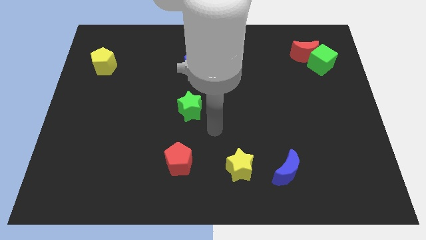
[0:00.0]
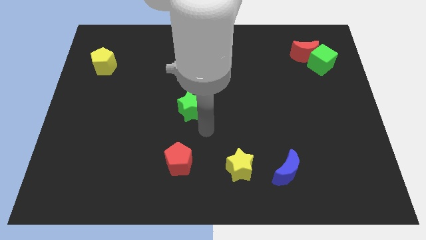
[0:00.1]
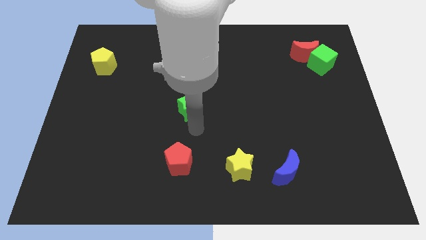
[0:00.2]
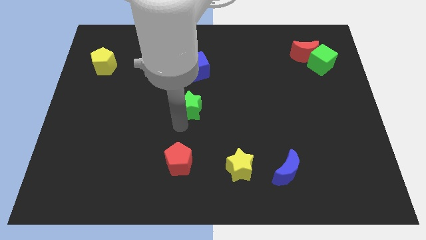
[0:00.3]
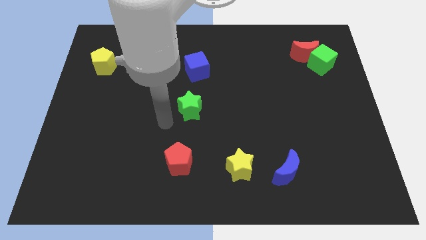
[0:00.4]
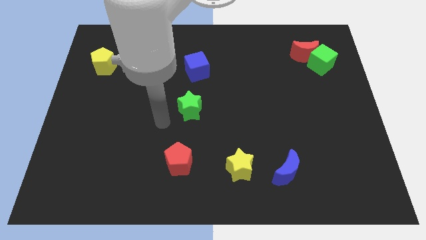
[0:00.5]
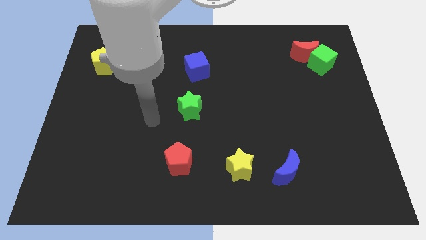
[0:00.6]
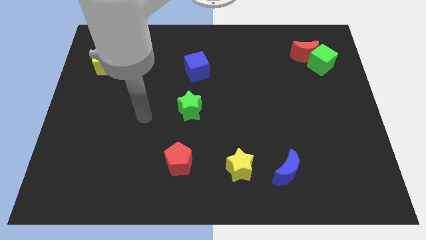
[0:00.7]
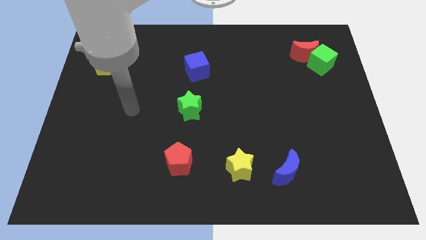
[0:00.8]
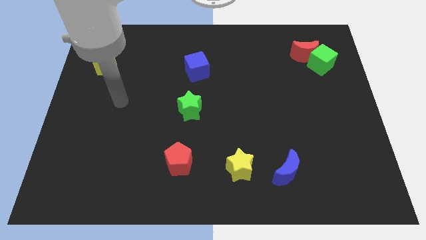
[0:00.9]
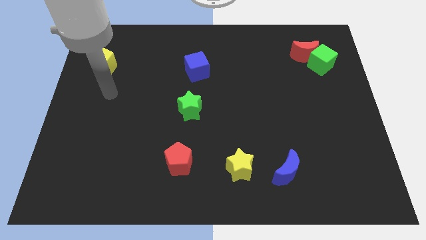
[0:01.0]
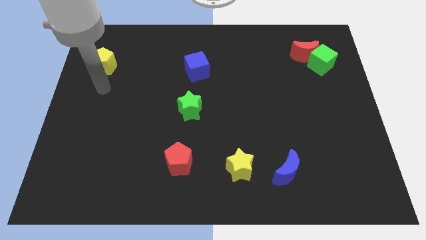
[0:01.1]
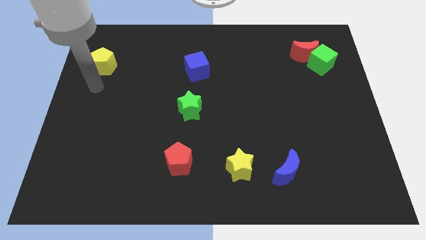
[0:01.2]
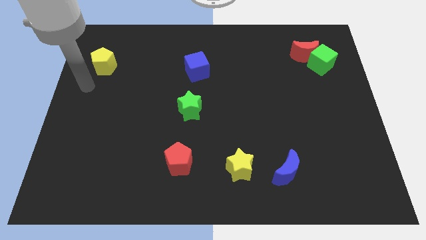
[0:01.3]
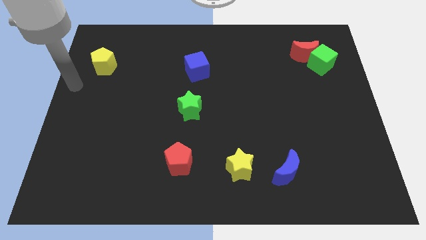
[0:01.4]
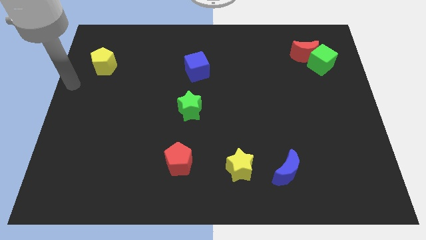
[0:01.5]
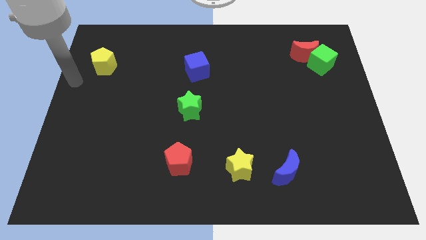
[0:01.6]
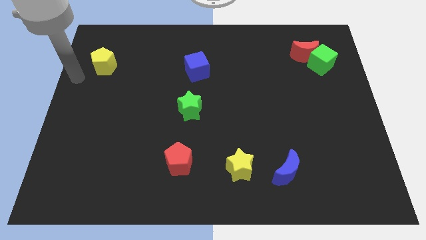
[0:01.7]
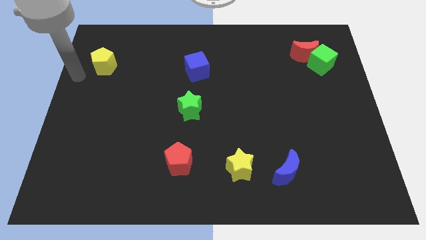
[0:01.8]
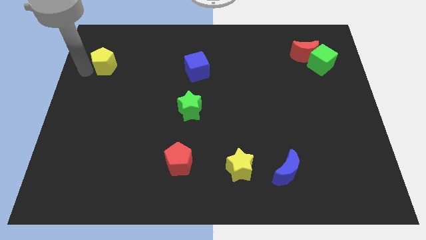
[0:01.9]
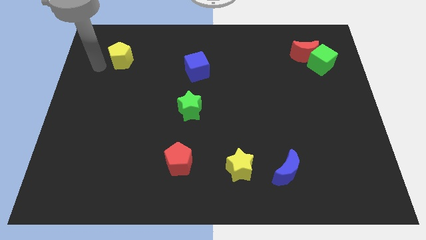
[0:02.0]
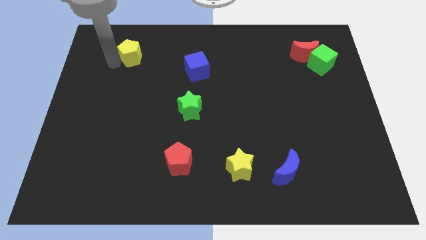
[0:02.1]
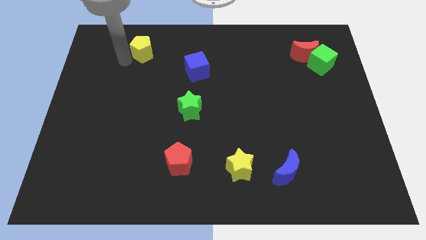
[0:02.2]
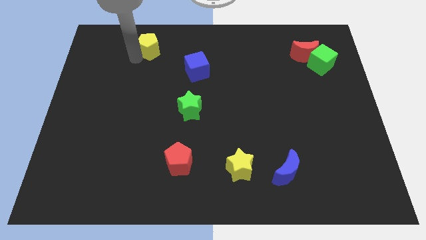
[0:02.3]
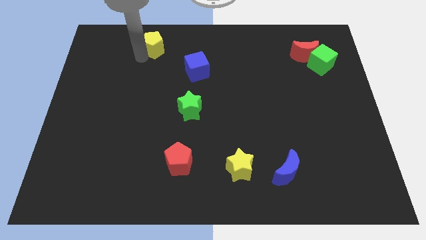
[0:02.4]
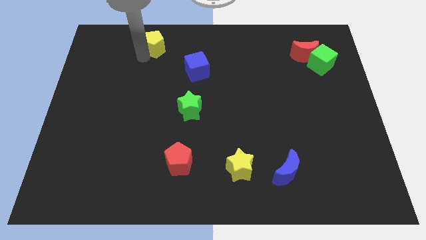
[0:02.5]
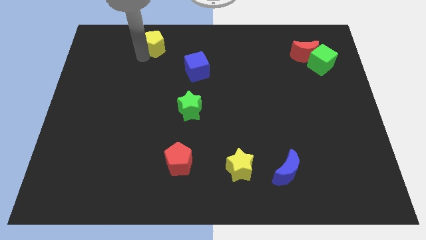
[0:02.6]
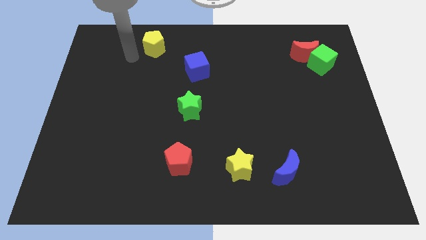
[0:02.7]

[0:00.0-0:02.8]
place the yellow pentagon diagonally to the left of the blue cube

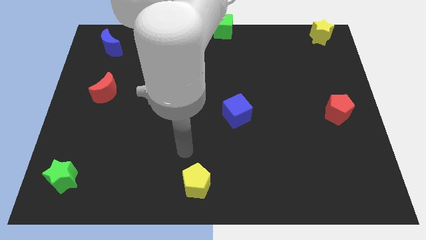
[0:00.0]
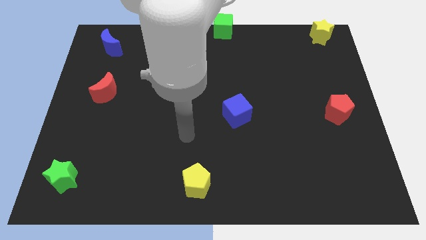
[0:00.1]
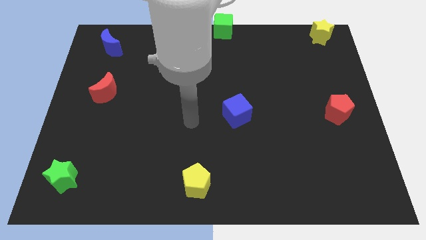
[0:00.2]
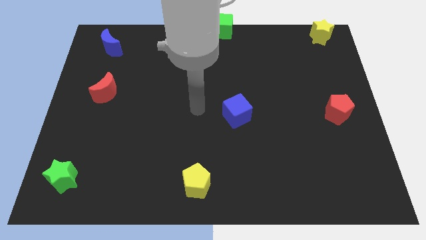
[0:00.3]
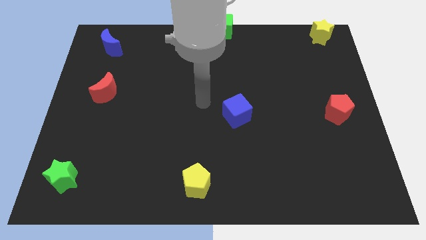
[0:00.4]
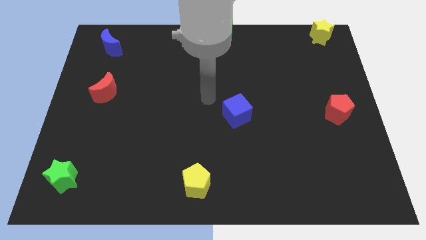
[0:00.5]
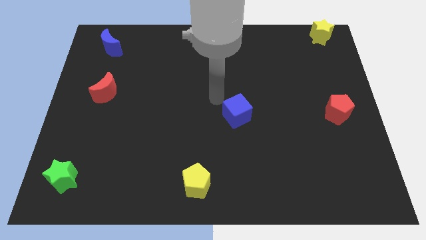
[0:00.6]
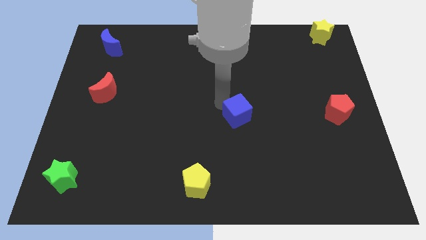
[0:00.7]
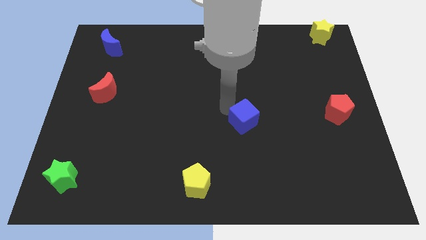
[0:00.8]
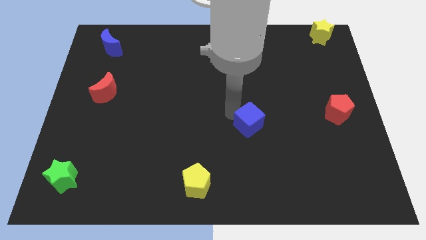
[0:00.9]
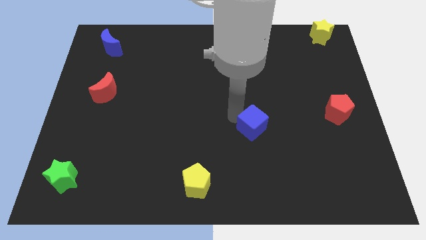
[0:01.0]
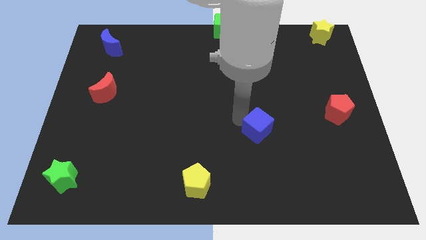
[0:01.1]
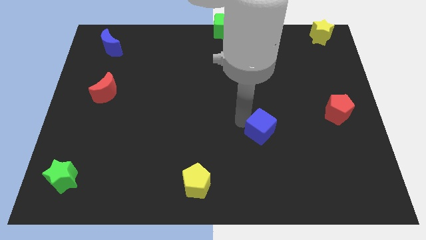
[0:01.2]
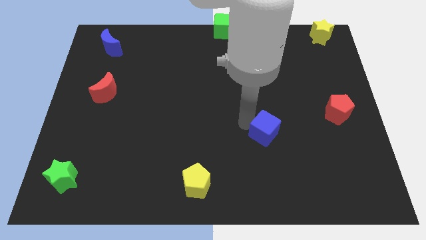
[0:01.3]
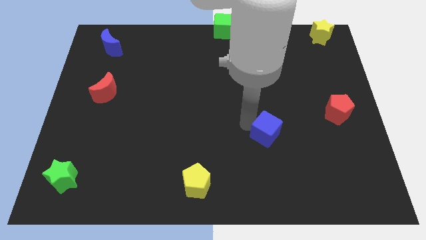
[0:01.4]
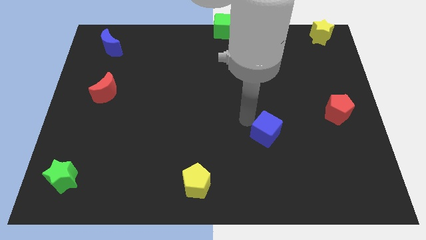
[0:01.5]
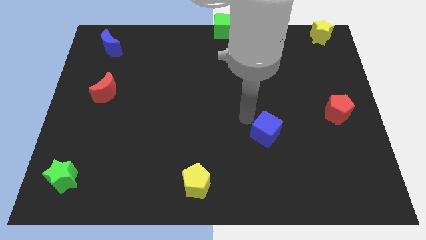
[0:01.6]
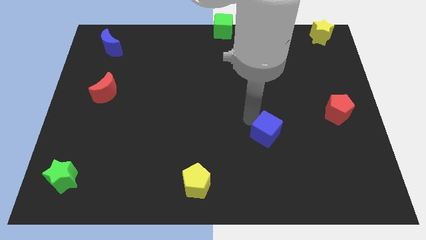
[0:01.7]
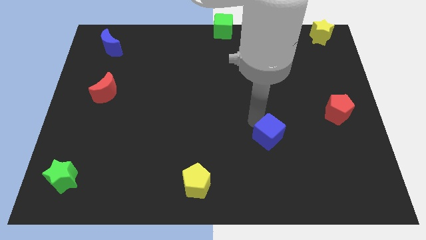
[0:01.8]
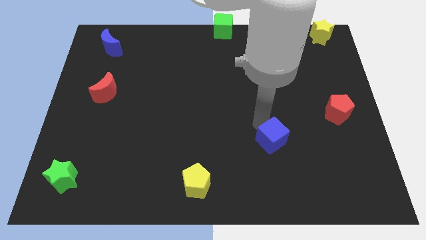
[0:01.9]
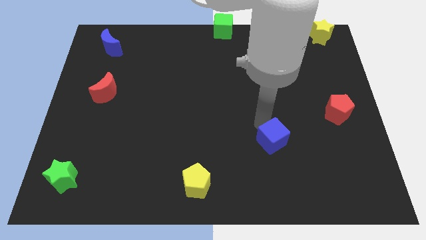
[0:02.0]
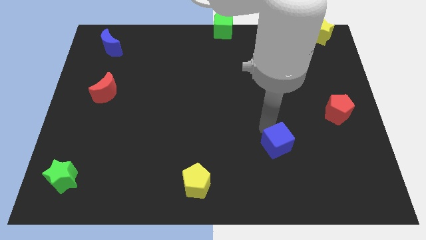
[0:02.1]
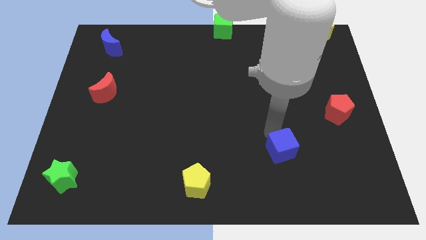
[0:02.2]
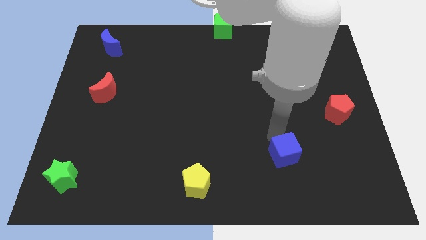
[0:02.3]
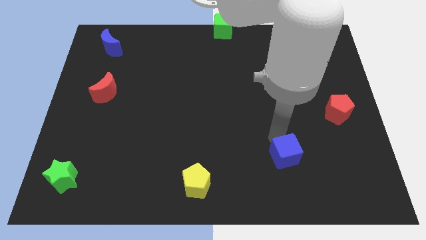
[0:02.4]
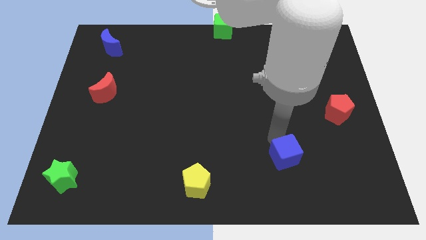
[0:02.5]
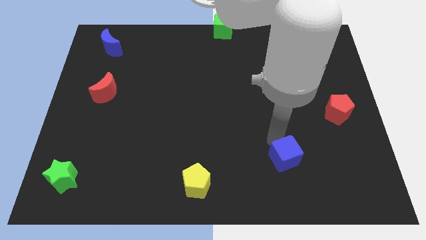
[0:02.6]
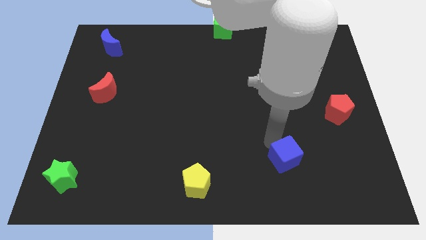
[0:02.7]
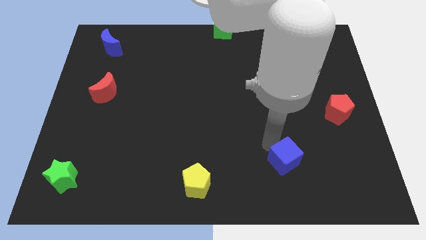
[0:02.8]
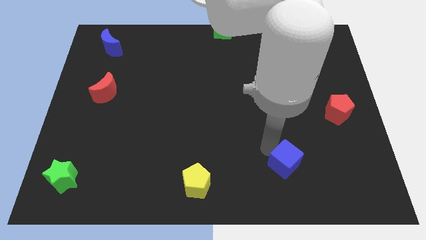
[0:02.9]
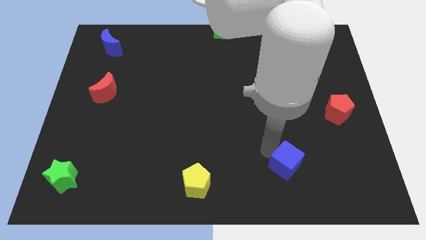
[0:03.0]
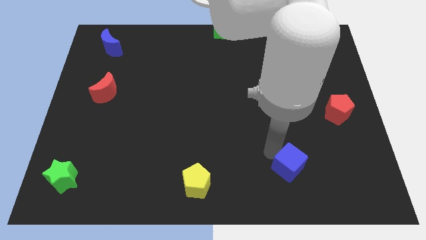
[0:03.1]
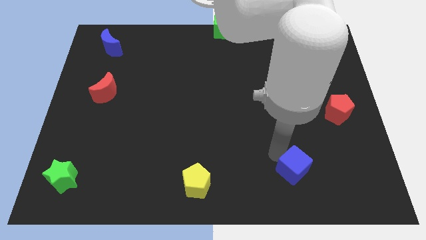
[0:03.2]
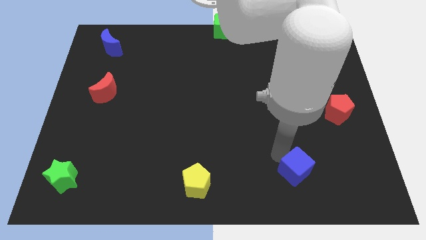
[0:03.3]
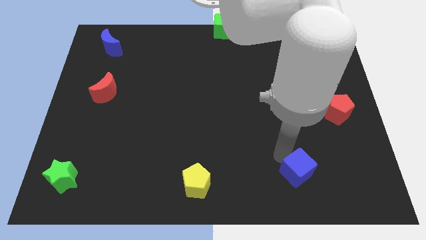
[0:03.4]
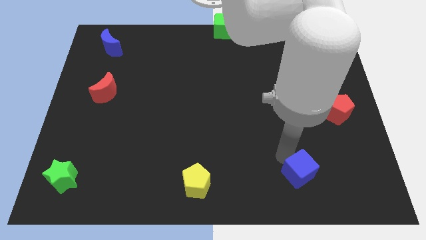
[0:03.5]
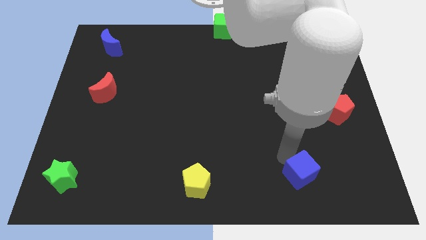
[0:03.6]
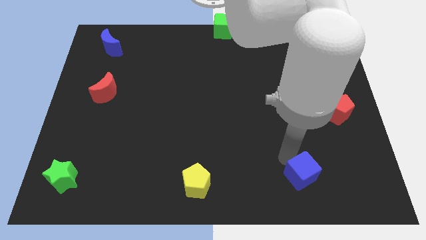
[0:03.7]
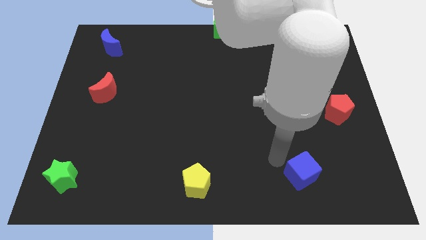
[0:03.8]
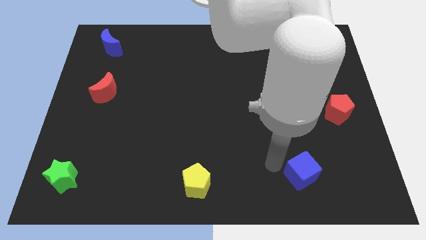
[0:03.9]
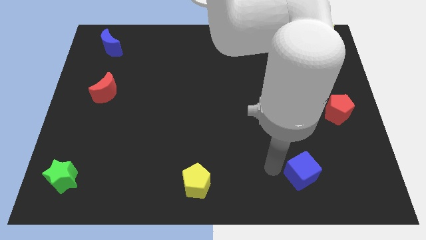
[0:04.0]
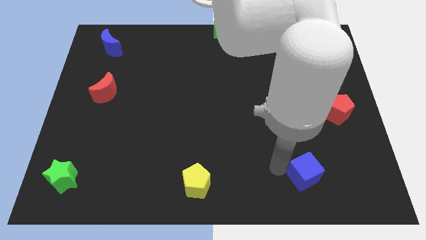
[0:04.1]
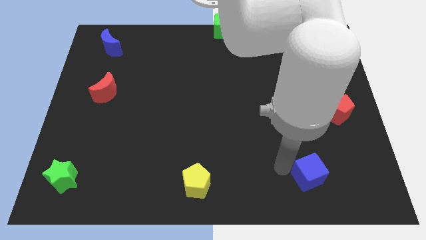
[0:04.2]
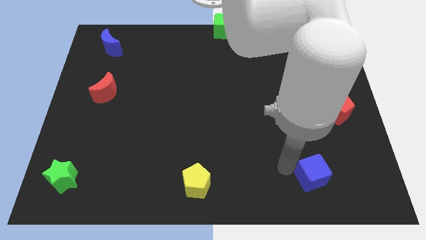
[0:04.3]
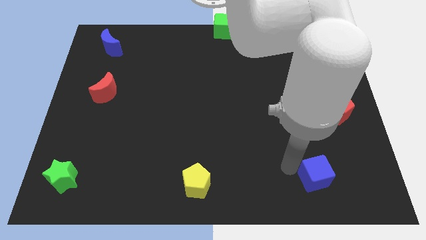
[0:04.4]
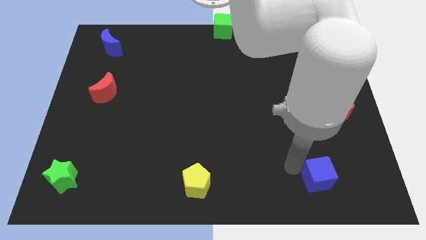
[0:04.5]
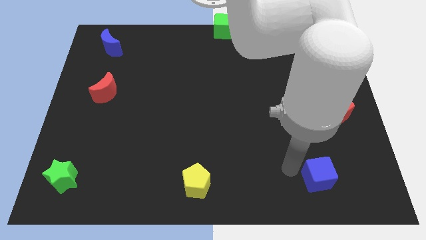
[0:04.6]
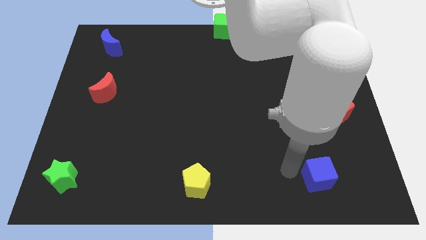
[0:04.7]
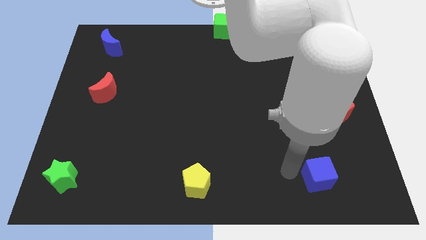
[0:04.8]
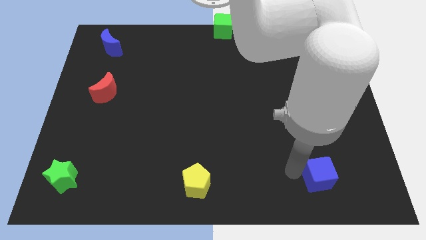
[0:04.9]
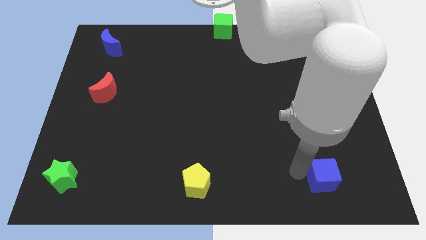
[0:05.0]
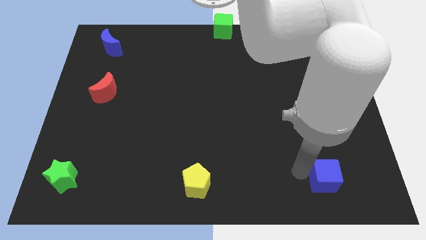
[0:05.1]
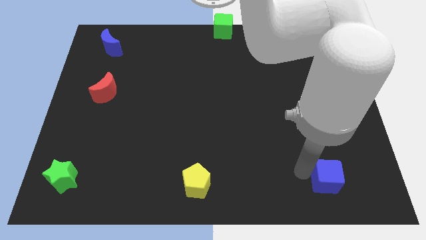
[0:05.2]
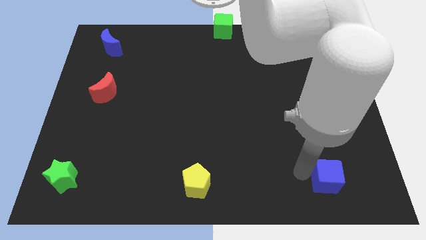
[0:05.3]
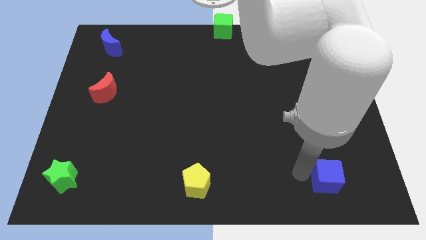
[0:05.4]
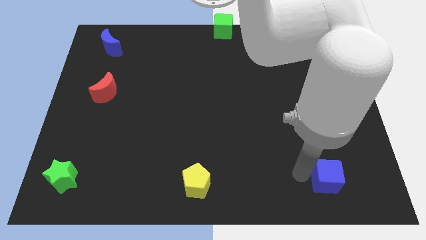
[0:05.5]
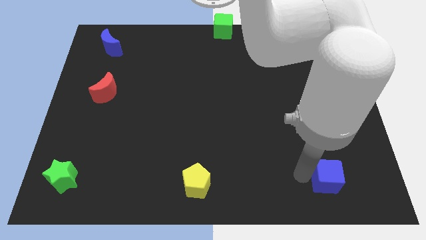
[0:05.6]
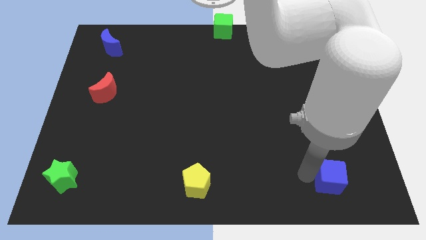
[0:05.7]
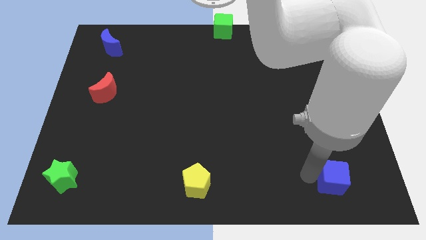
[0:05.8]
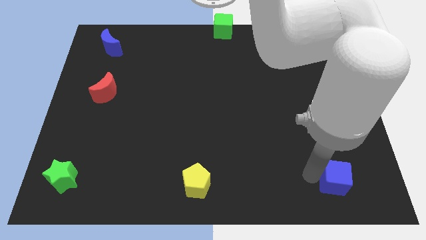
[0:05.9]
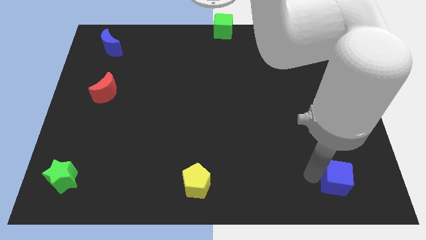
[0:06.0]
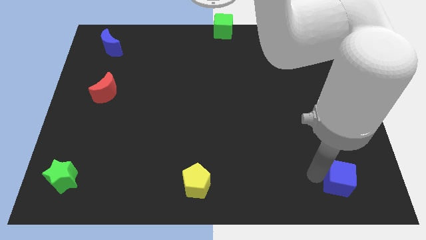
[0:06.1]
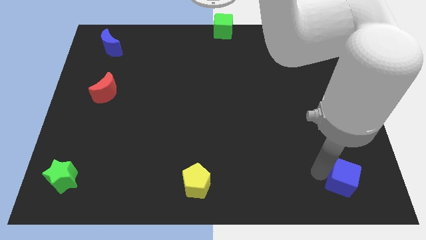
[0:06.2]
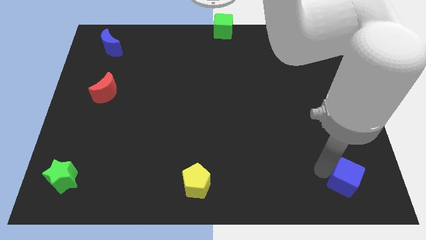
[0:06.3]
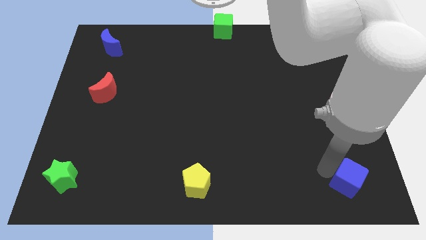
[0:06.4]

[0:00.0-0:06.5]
move the blue cube towards the bottom right side of the board
